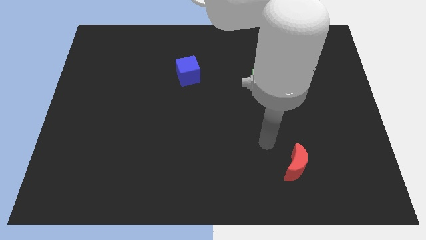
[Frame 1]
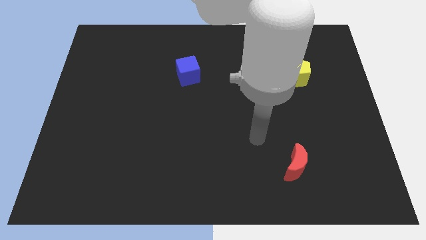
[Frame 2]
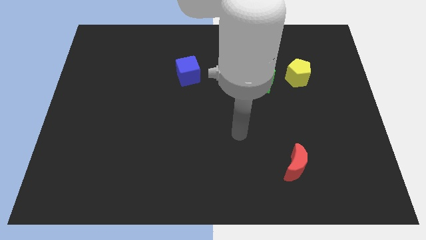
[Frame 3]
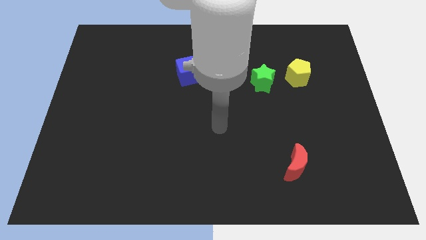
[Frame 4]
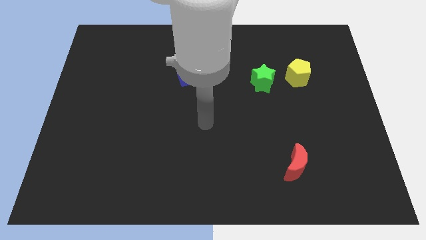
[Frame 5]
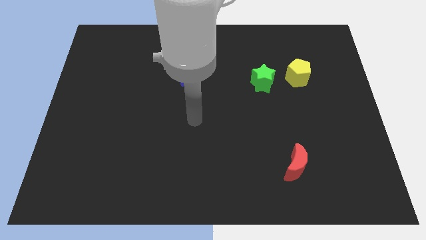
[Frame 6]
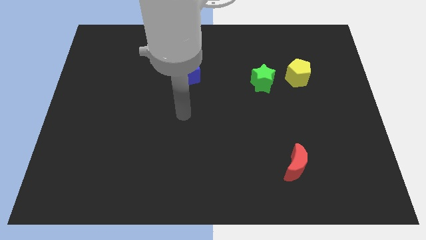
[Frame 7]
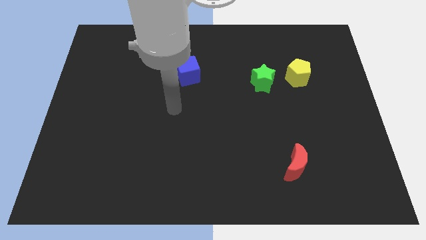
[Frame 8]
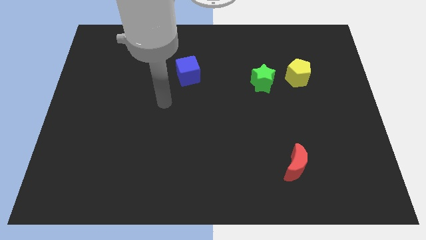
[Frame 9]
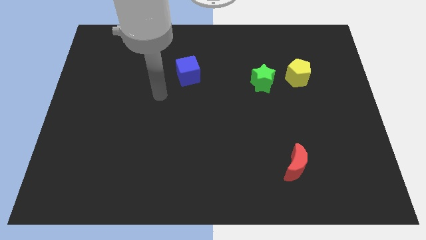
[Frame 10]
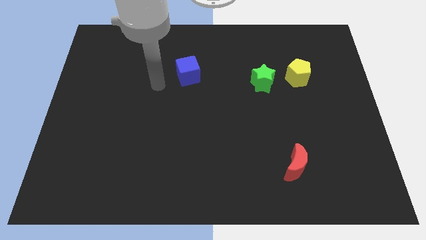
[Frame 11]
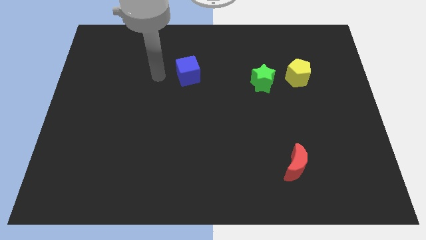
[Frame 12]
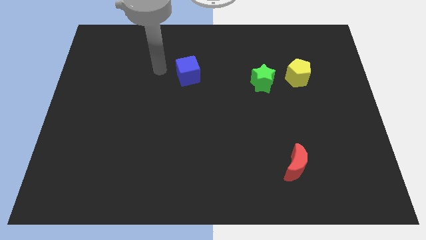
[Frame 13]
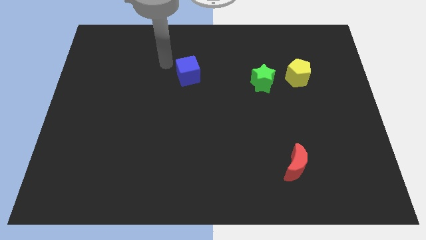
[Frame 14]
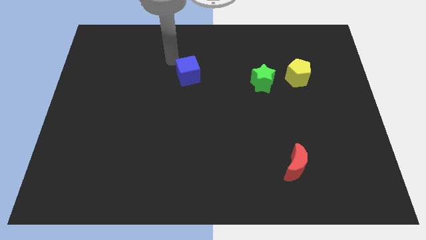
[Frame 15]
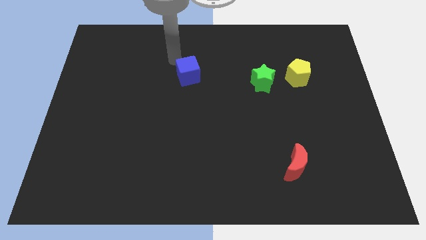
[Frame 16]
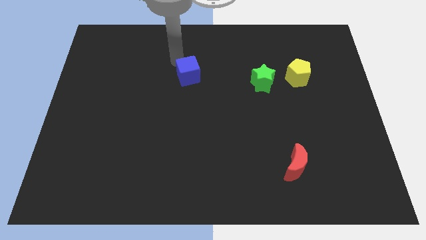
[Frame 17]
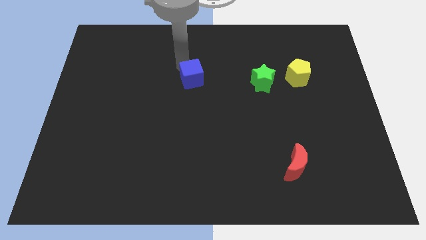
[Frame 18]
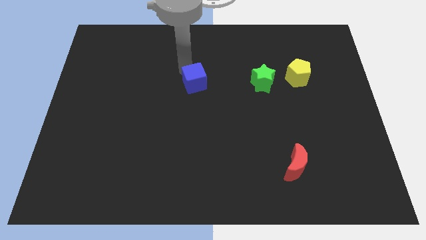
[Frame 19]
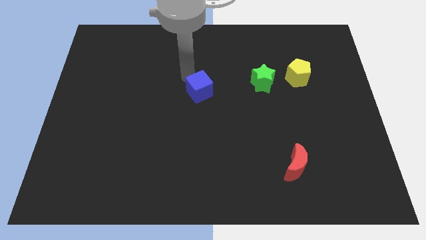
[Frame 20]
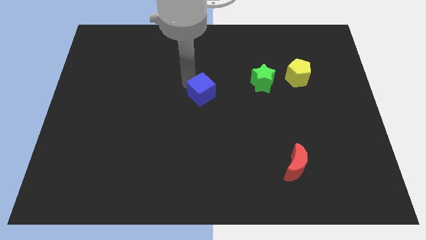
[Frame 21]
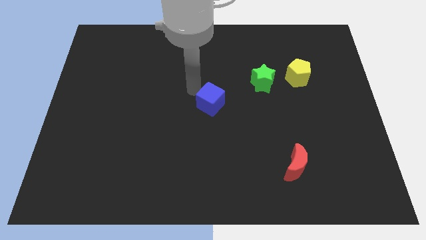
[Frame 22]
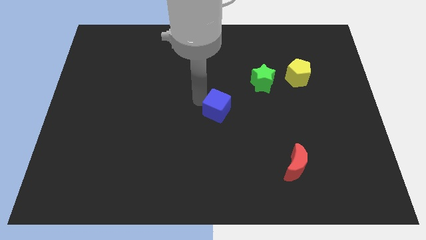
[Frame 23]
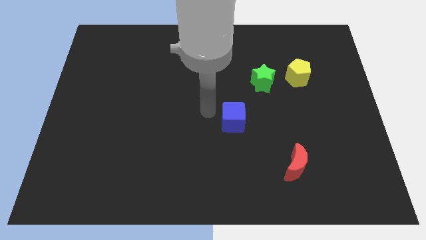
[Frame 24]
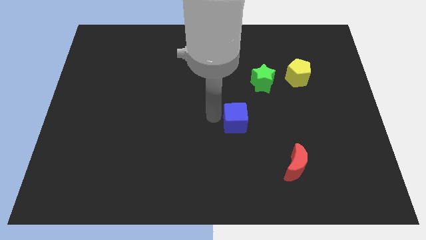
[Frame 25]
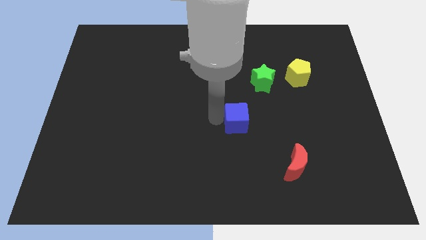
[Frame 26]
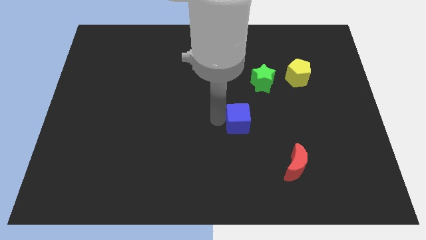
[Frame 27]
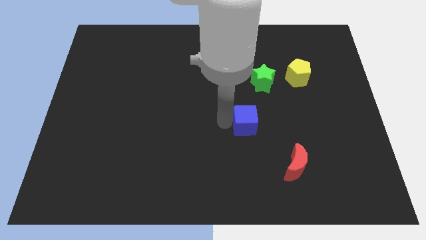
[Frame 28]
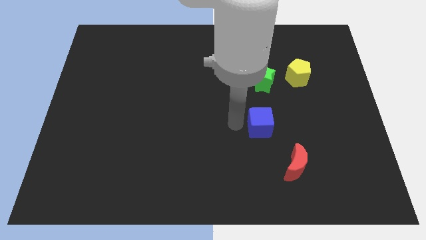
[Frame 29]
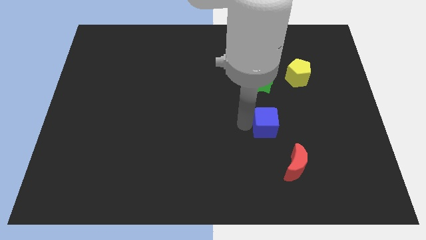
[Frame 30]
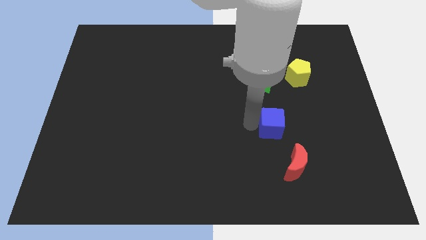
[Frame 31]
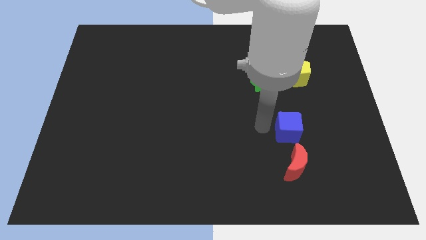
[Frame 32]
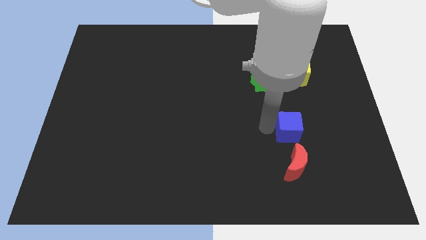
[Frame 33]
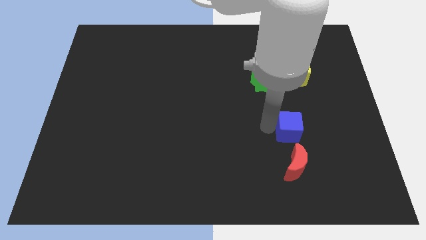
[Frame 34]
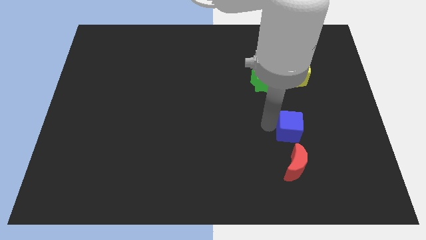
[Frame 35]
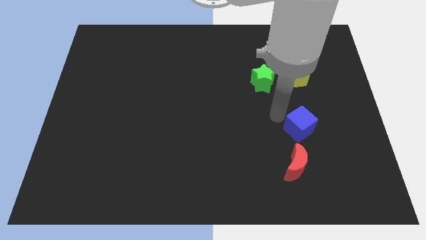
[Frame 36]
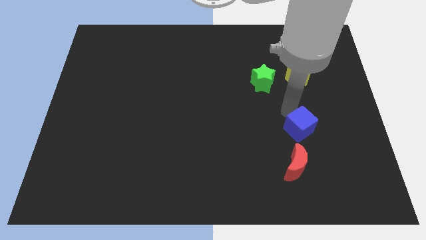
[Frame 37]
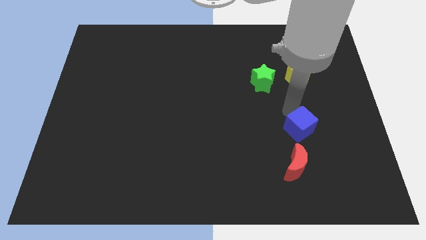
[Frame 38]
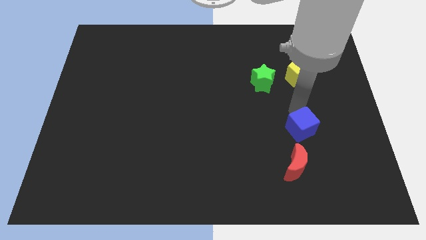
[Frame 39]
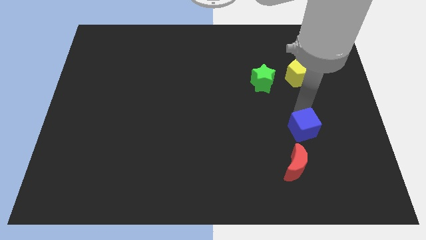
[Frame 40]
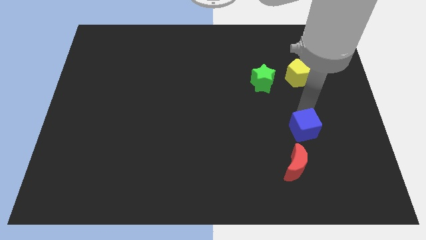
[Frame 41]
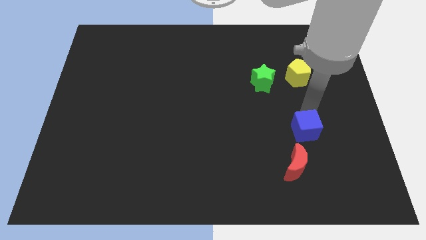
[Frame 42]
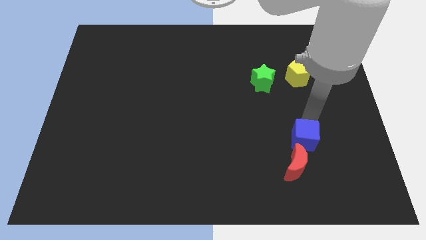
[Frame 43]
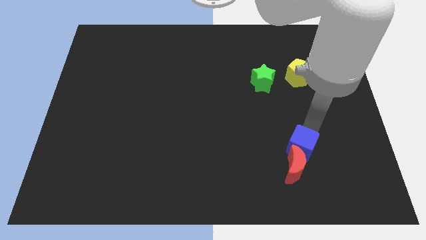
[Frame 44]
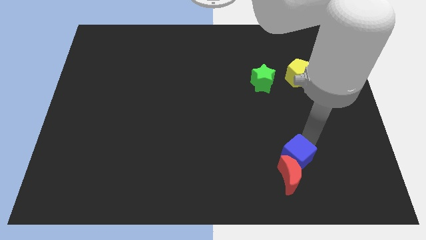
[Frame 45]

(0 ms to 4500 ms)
push the blue cube next to the red moon

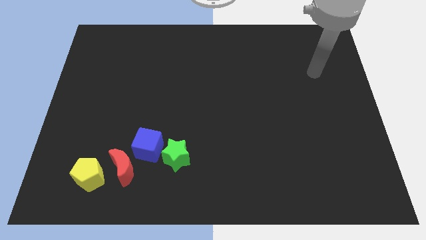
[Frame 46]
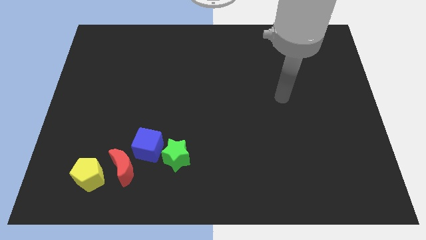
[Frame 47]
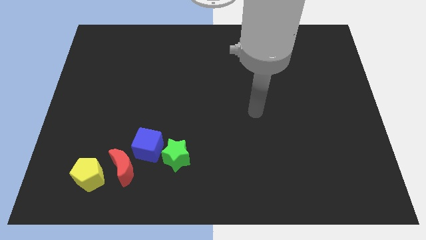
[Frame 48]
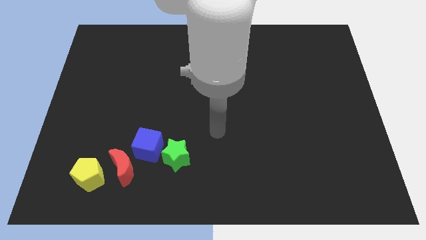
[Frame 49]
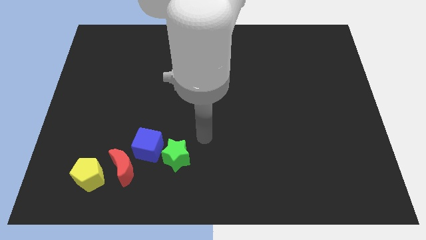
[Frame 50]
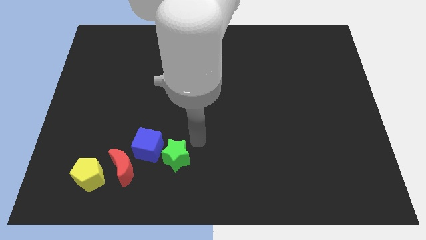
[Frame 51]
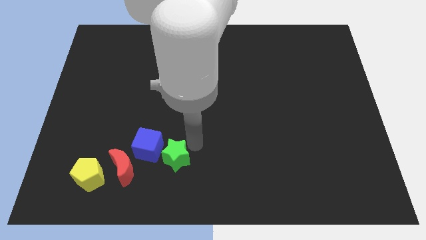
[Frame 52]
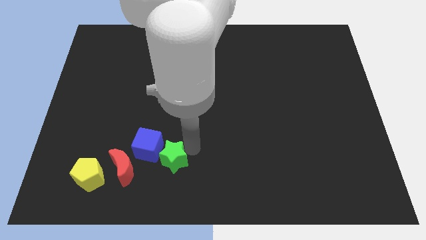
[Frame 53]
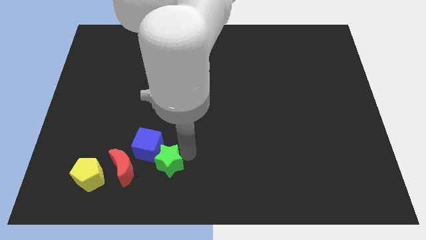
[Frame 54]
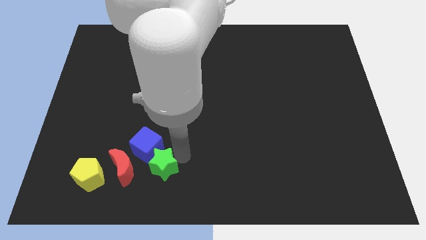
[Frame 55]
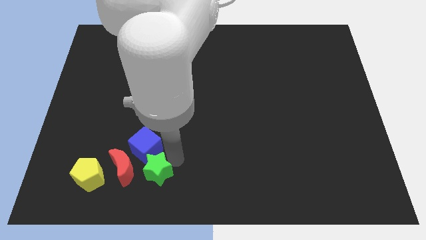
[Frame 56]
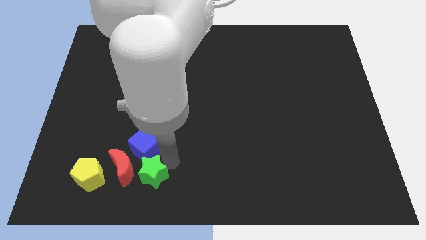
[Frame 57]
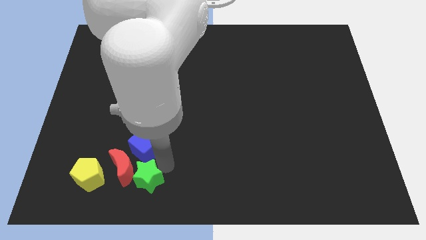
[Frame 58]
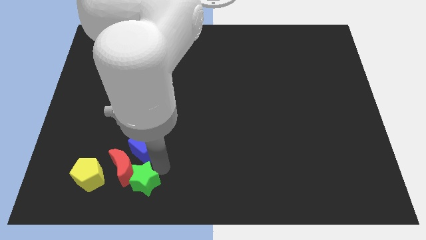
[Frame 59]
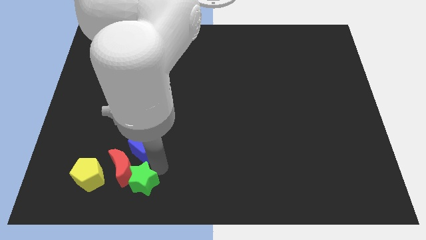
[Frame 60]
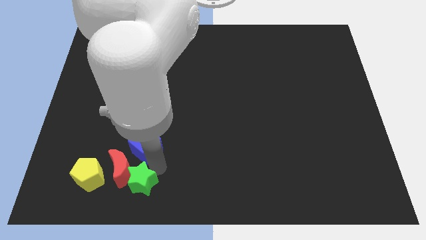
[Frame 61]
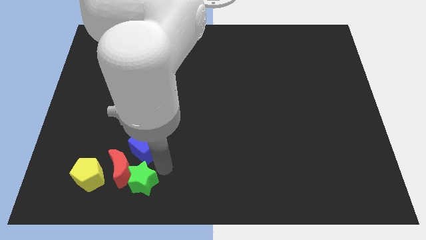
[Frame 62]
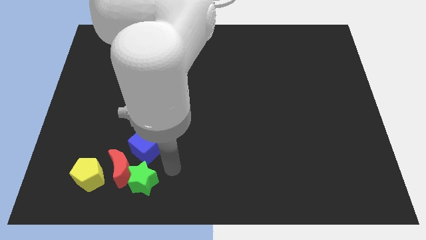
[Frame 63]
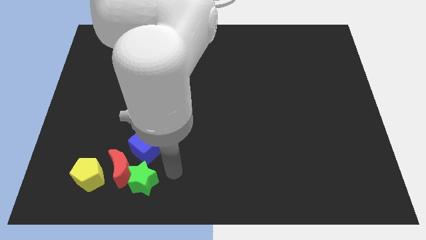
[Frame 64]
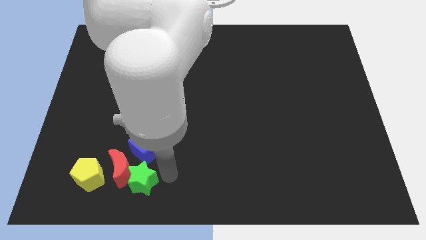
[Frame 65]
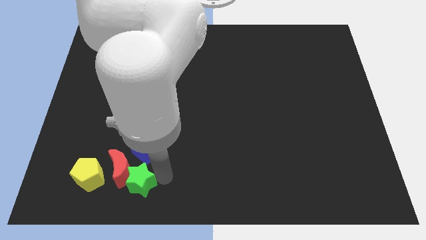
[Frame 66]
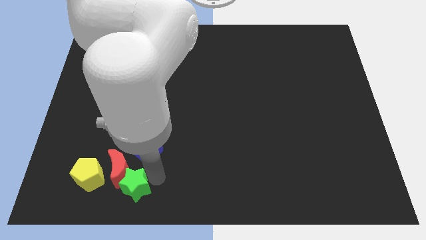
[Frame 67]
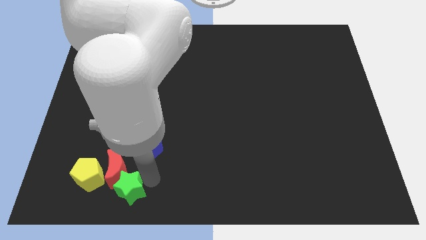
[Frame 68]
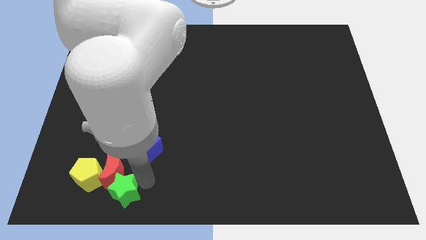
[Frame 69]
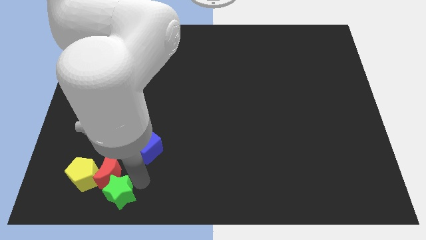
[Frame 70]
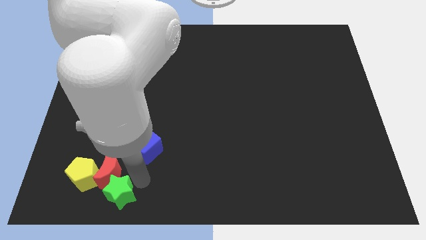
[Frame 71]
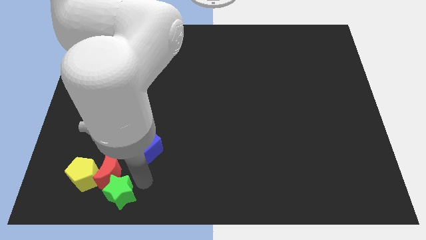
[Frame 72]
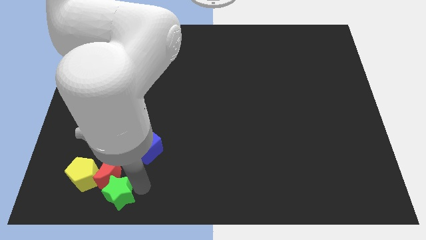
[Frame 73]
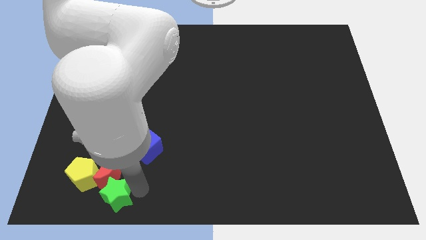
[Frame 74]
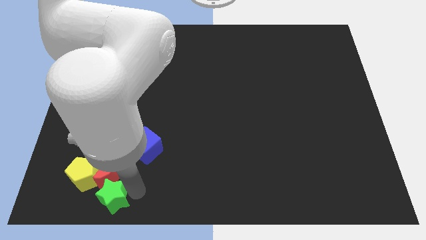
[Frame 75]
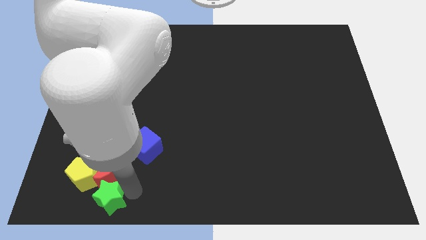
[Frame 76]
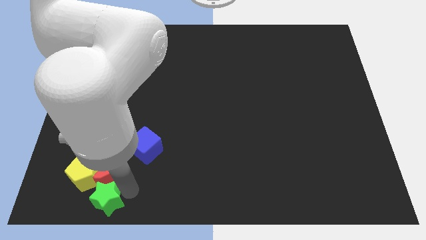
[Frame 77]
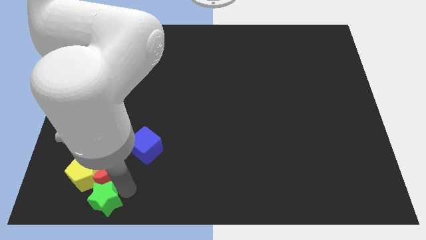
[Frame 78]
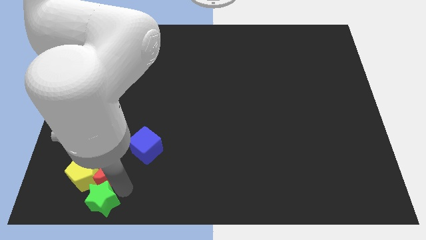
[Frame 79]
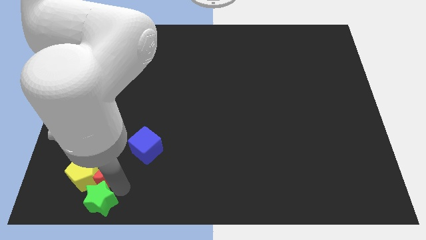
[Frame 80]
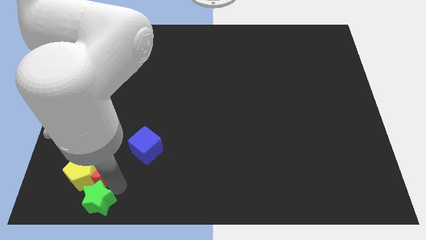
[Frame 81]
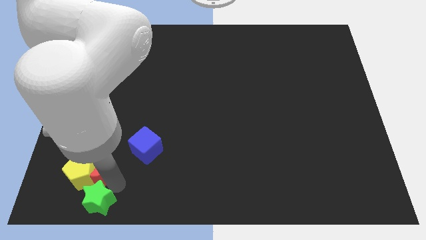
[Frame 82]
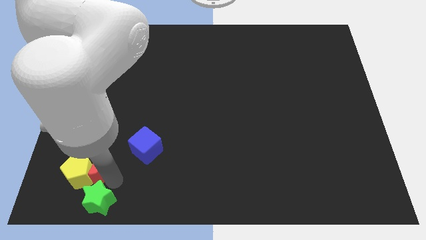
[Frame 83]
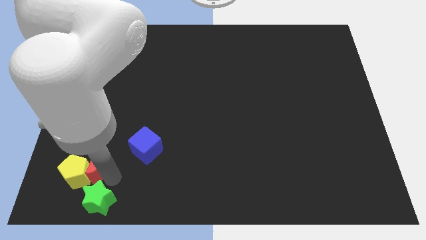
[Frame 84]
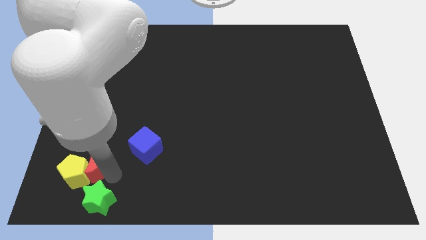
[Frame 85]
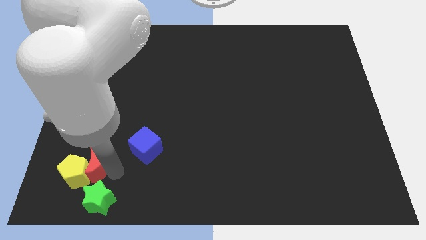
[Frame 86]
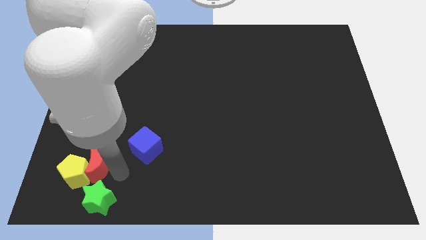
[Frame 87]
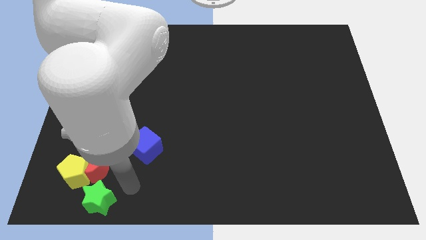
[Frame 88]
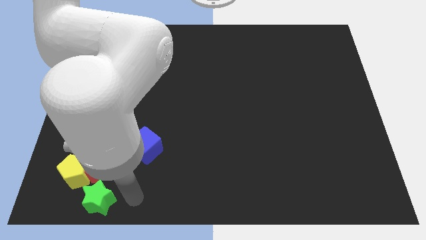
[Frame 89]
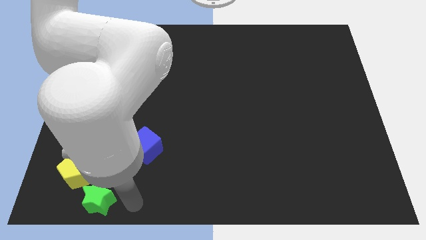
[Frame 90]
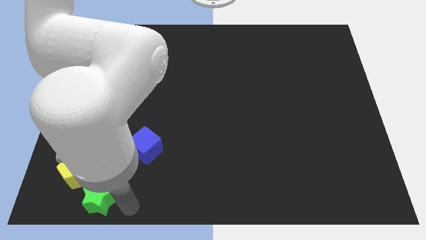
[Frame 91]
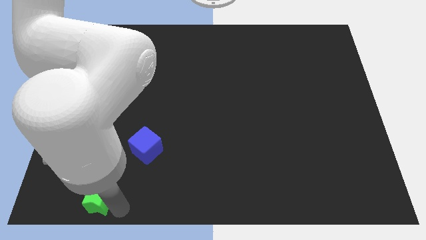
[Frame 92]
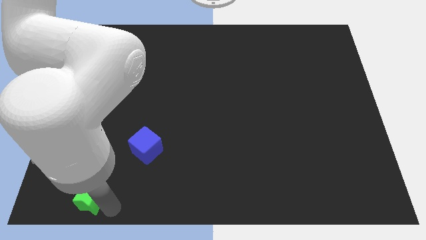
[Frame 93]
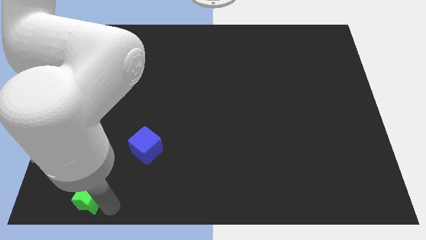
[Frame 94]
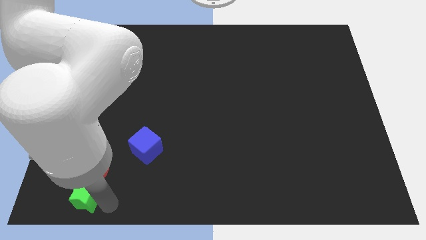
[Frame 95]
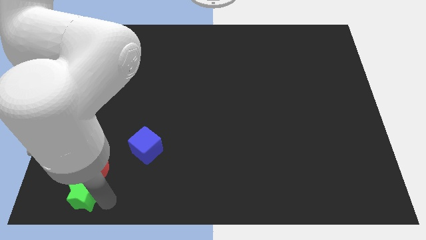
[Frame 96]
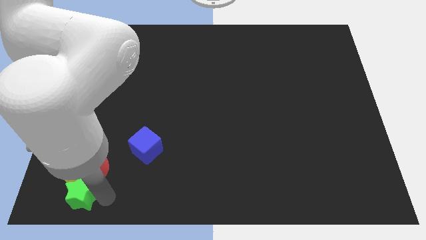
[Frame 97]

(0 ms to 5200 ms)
slide the green block towards the pentagon
